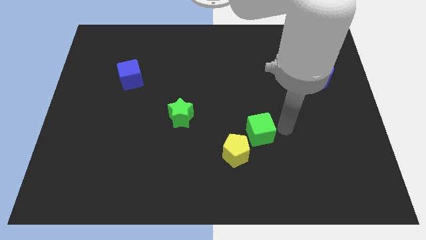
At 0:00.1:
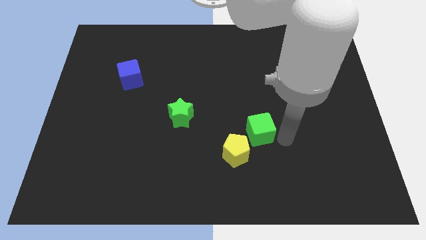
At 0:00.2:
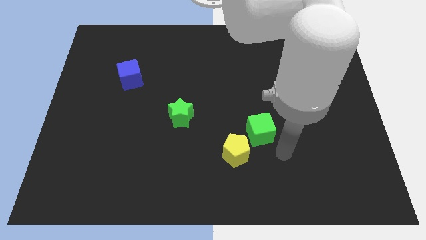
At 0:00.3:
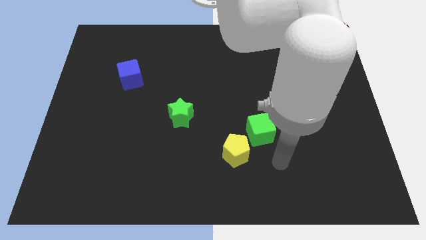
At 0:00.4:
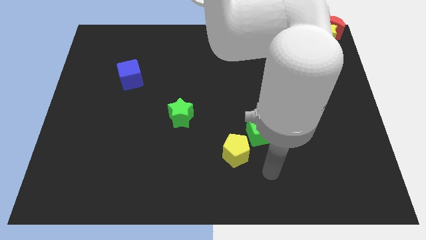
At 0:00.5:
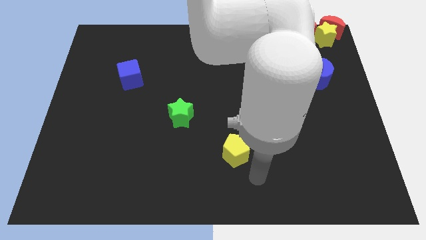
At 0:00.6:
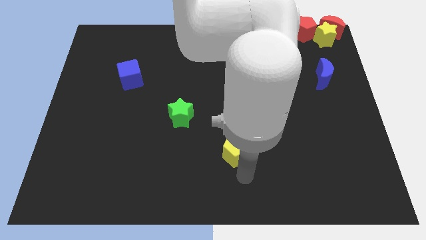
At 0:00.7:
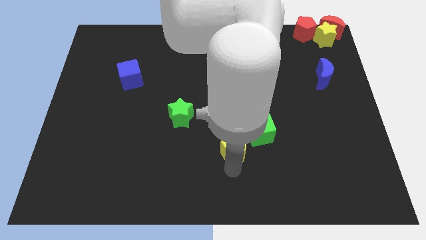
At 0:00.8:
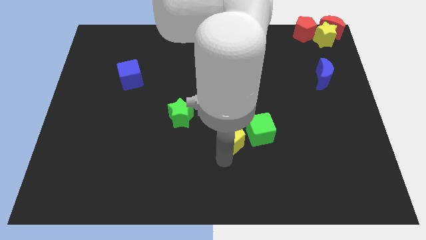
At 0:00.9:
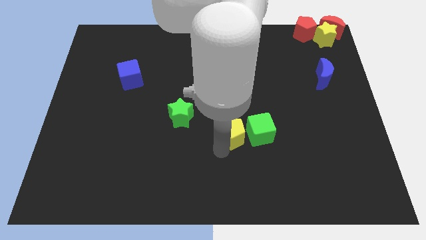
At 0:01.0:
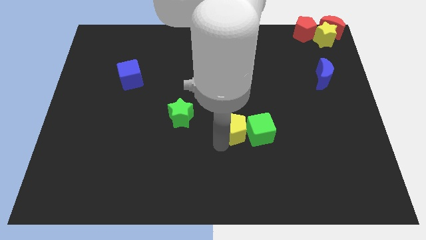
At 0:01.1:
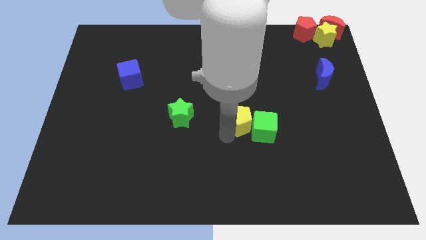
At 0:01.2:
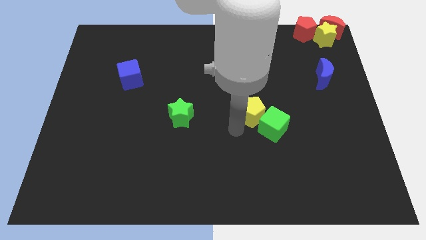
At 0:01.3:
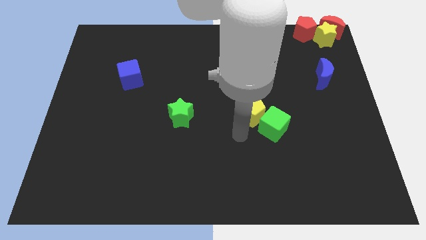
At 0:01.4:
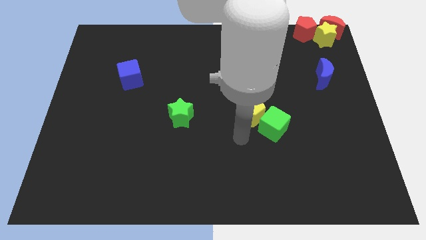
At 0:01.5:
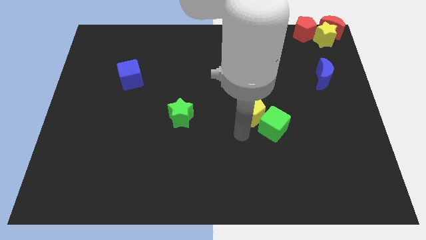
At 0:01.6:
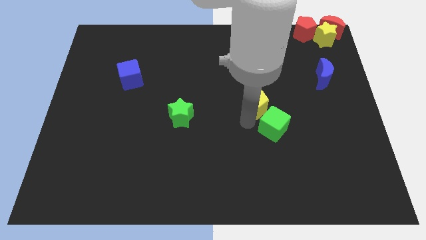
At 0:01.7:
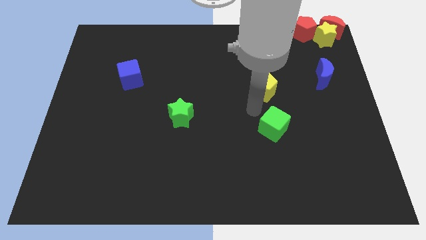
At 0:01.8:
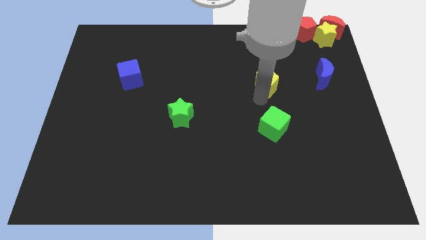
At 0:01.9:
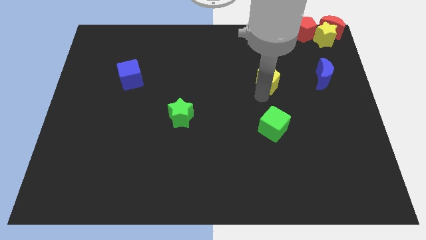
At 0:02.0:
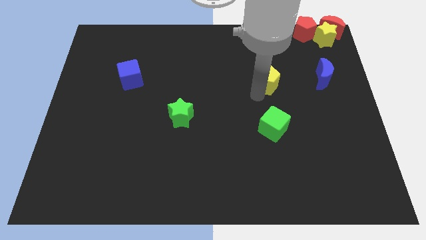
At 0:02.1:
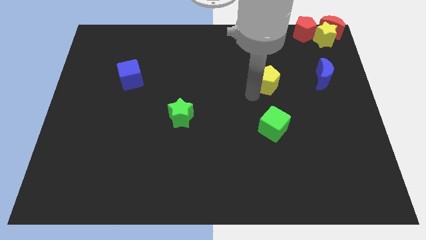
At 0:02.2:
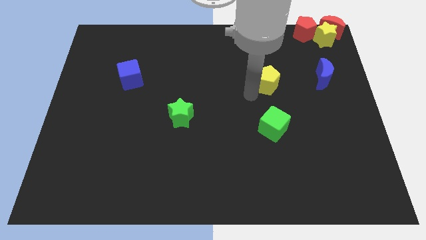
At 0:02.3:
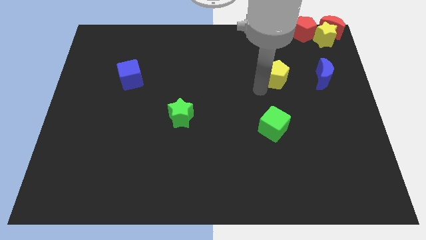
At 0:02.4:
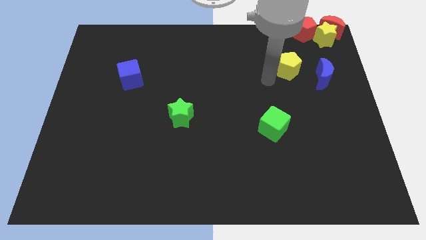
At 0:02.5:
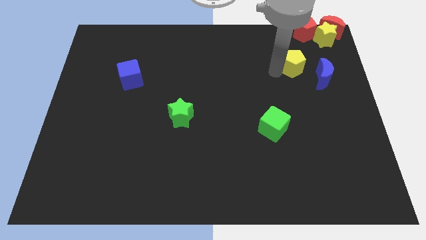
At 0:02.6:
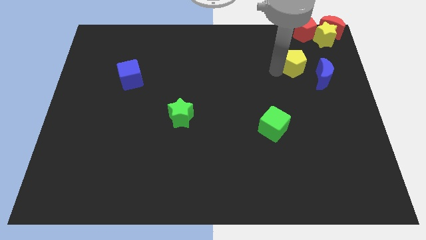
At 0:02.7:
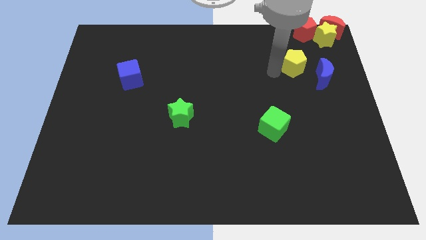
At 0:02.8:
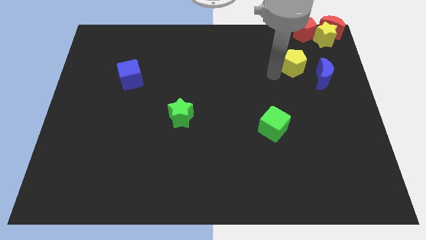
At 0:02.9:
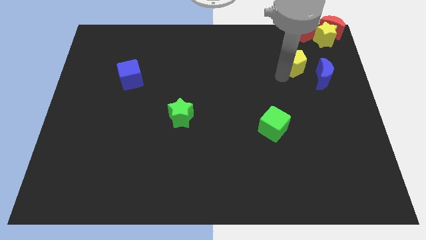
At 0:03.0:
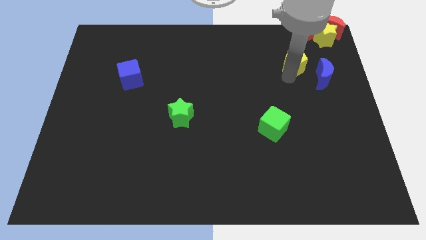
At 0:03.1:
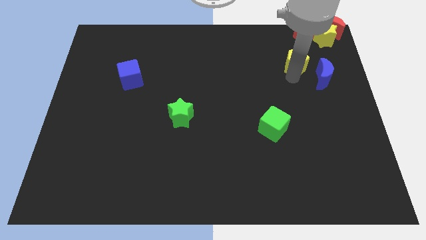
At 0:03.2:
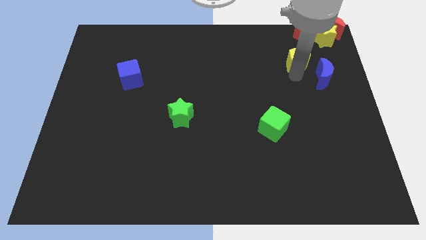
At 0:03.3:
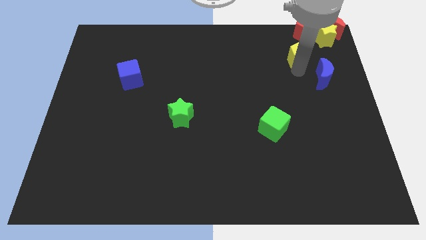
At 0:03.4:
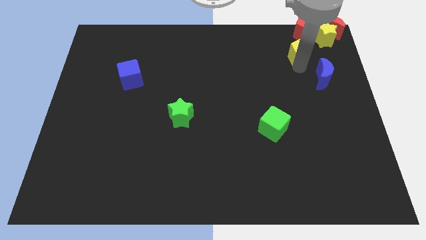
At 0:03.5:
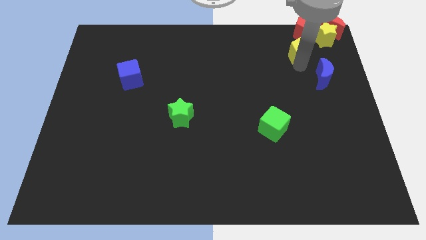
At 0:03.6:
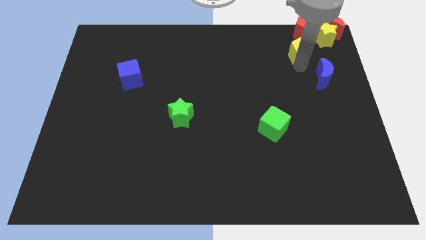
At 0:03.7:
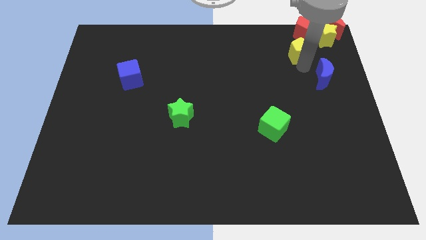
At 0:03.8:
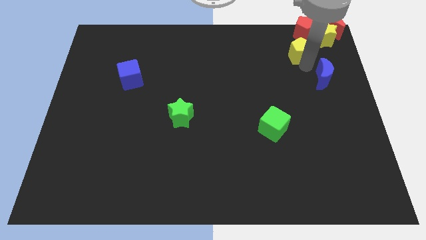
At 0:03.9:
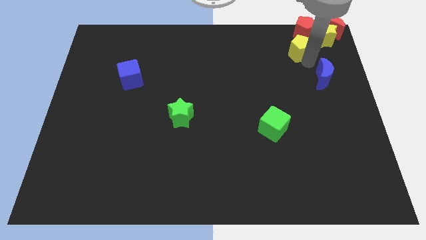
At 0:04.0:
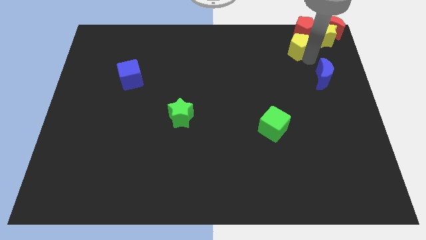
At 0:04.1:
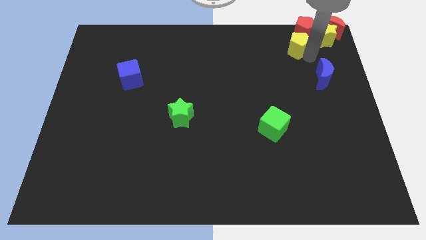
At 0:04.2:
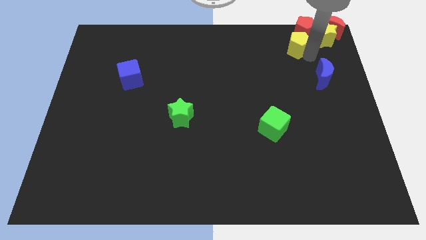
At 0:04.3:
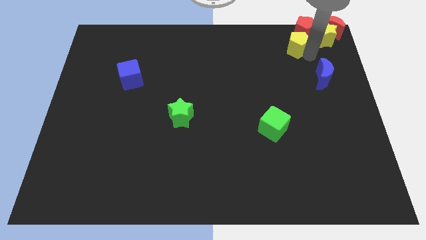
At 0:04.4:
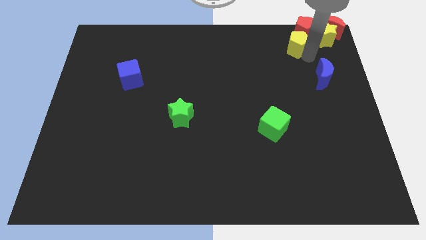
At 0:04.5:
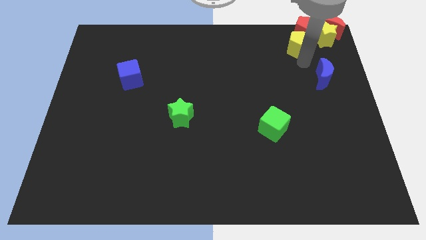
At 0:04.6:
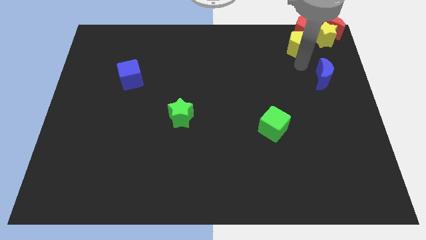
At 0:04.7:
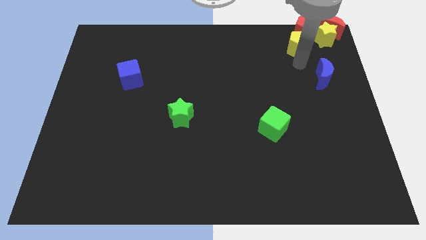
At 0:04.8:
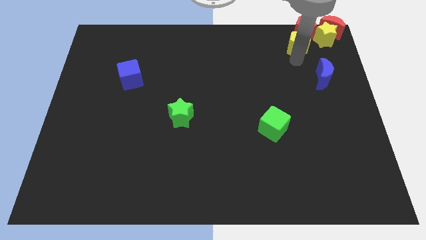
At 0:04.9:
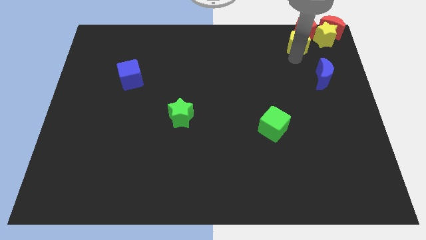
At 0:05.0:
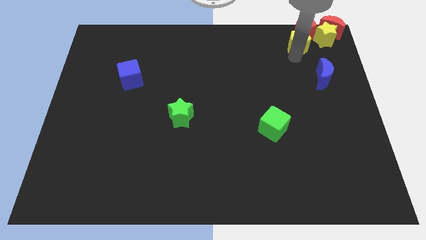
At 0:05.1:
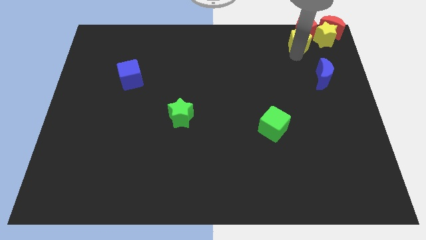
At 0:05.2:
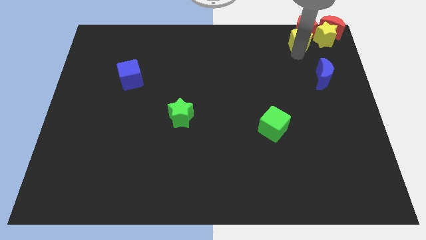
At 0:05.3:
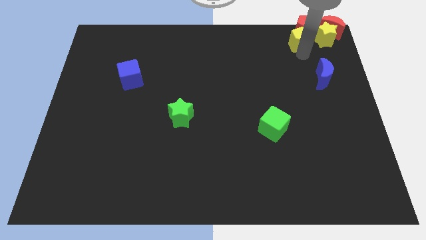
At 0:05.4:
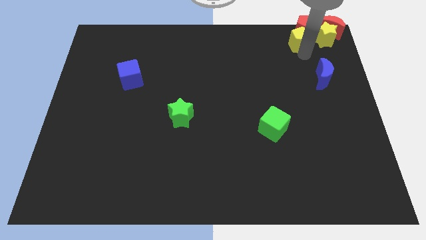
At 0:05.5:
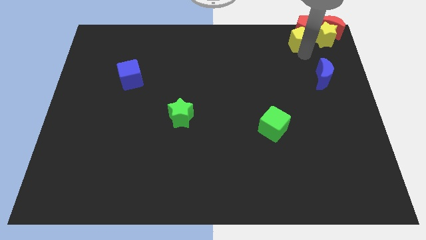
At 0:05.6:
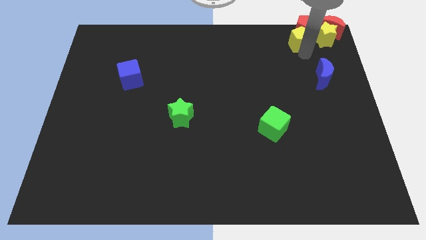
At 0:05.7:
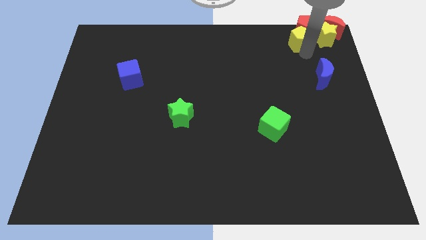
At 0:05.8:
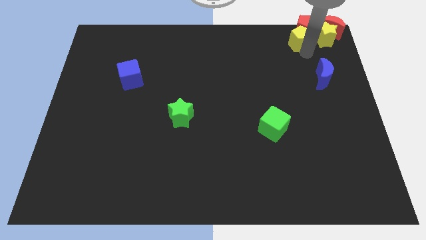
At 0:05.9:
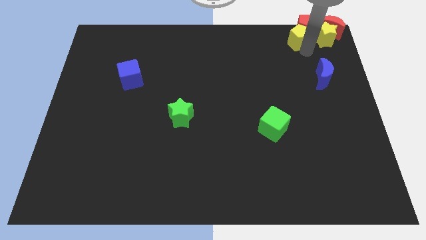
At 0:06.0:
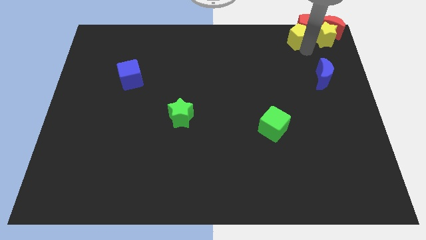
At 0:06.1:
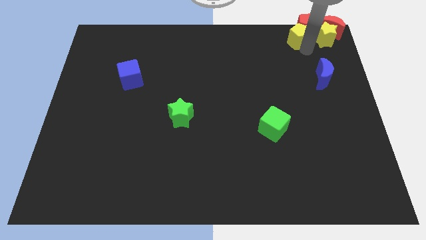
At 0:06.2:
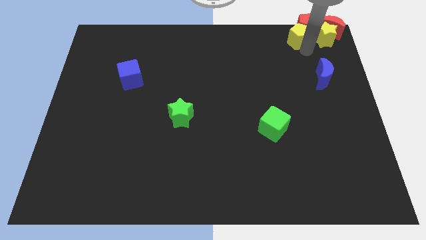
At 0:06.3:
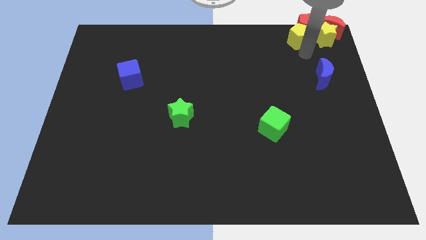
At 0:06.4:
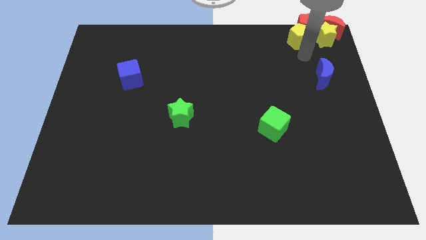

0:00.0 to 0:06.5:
place the yellow pentagon left to the yellow star

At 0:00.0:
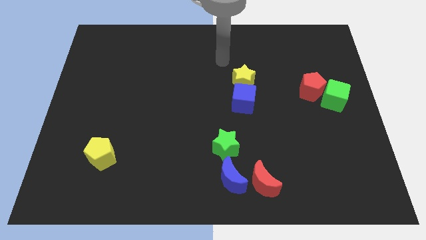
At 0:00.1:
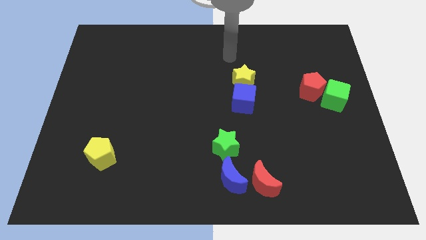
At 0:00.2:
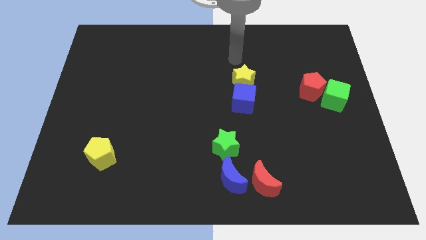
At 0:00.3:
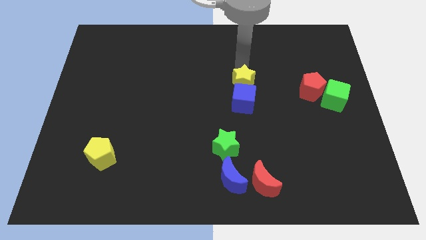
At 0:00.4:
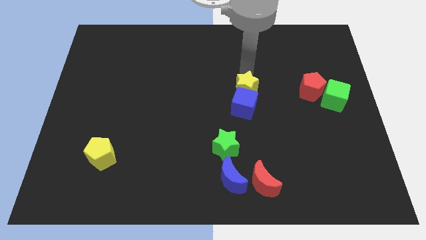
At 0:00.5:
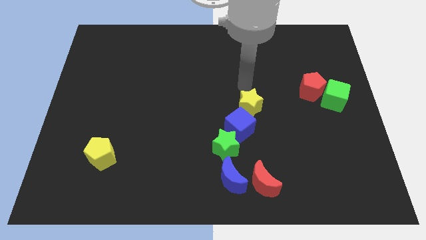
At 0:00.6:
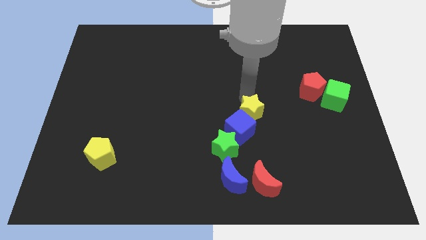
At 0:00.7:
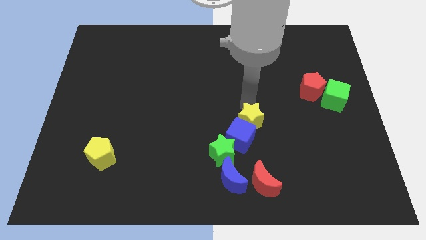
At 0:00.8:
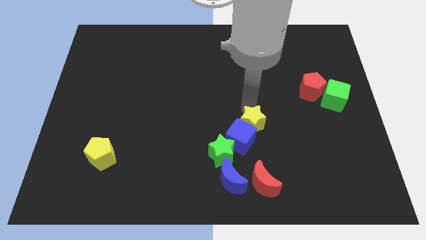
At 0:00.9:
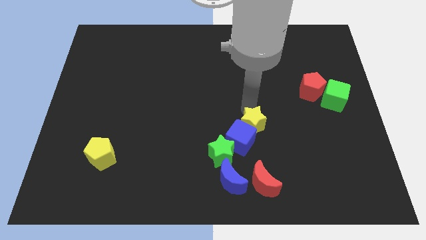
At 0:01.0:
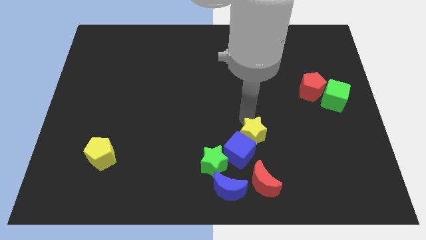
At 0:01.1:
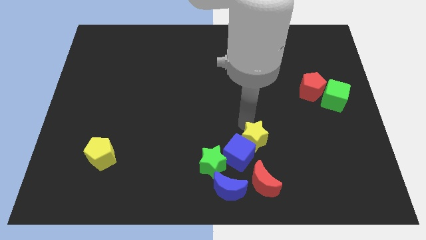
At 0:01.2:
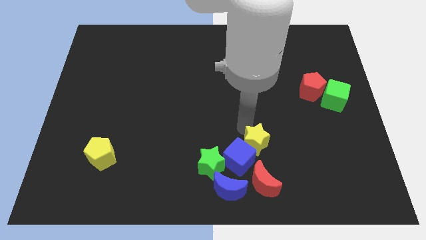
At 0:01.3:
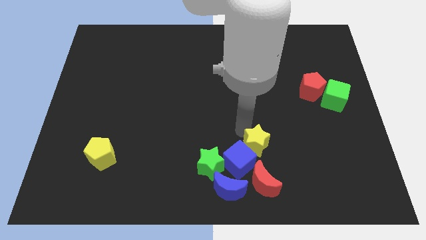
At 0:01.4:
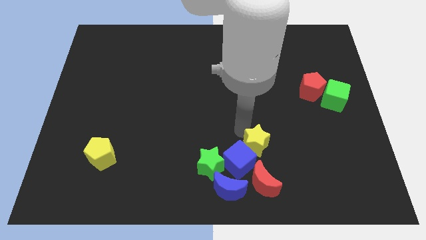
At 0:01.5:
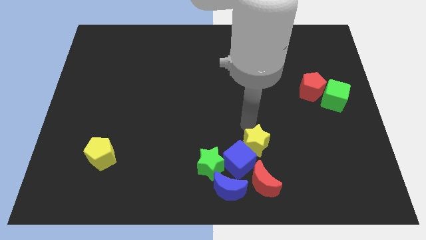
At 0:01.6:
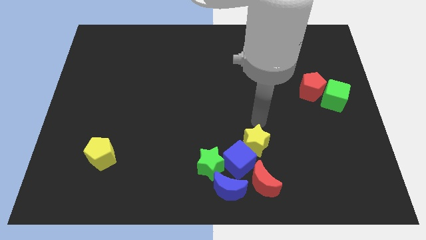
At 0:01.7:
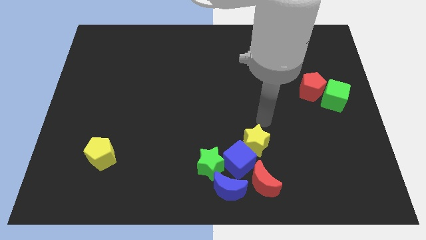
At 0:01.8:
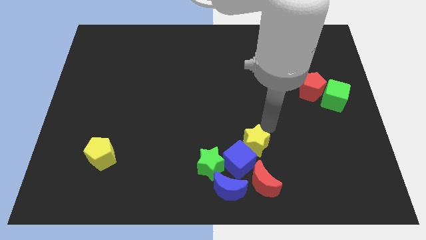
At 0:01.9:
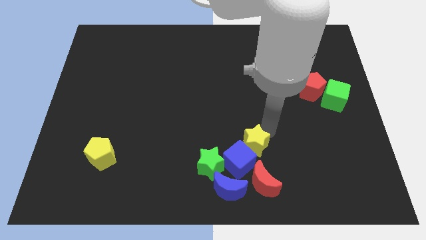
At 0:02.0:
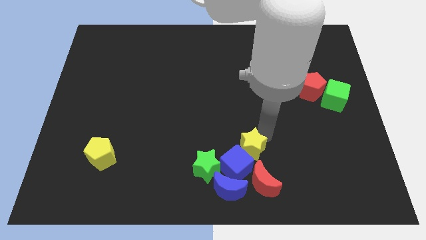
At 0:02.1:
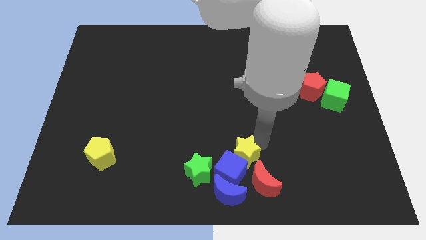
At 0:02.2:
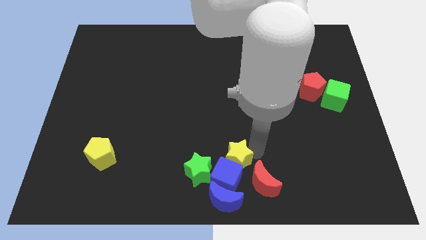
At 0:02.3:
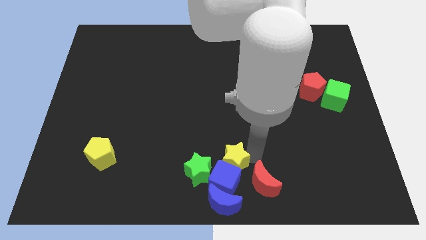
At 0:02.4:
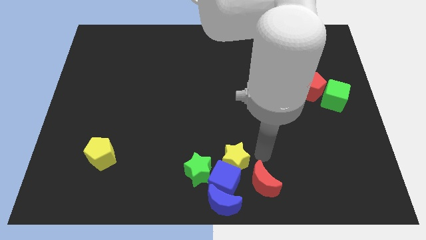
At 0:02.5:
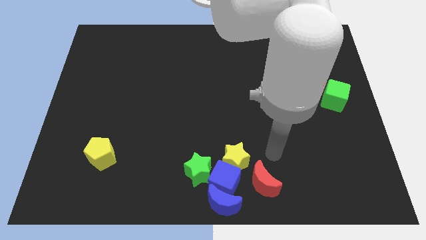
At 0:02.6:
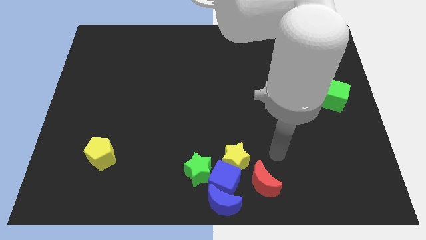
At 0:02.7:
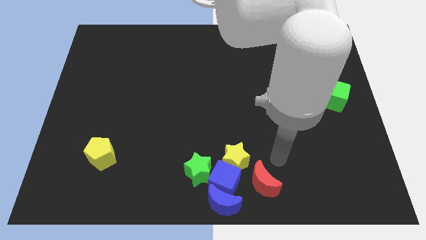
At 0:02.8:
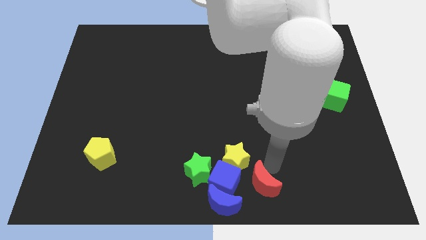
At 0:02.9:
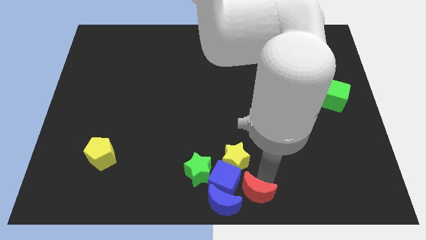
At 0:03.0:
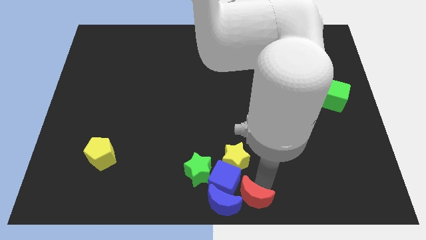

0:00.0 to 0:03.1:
move the yellow star into the blue cube
